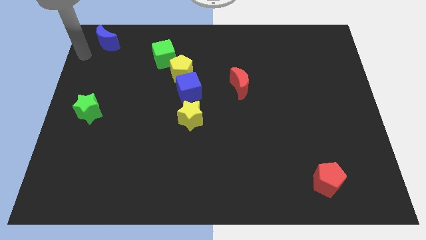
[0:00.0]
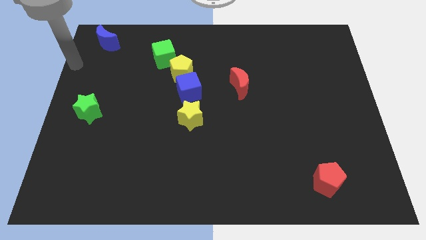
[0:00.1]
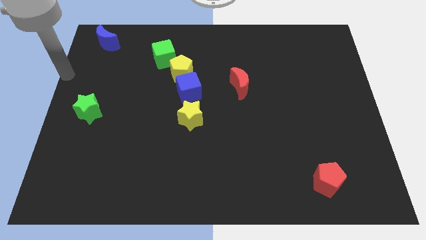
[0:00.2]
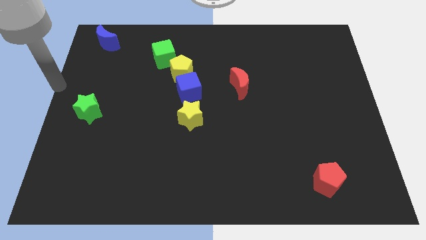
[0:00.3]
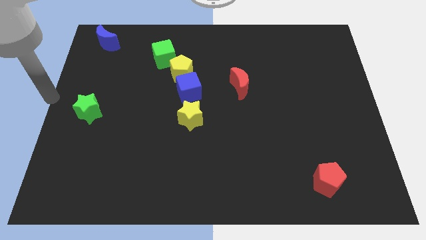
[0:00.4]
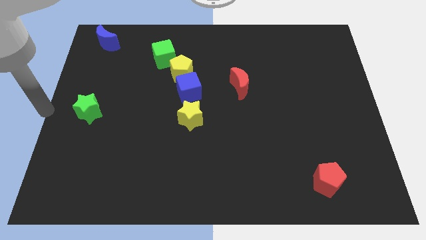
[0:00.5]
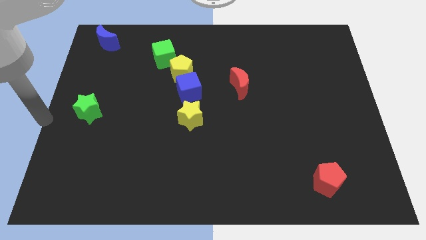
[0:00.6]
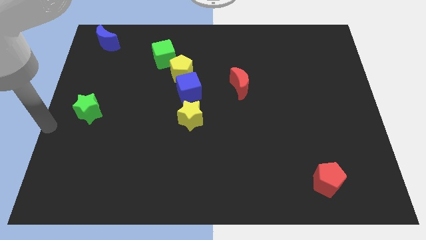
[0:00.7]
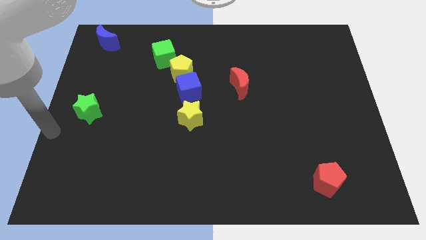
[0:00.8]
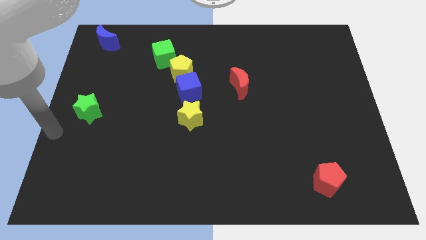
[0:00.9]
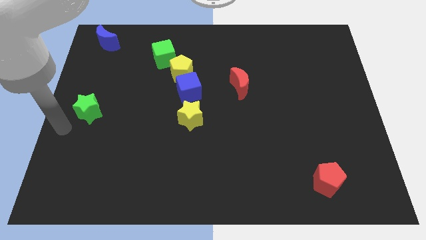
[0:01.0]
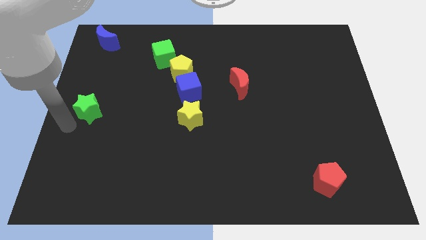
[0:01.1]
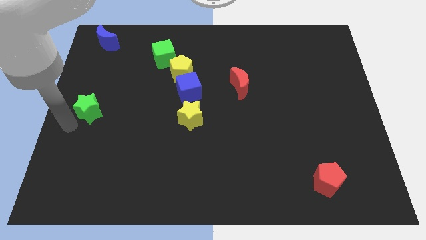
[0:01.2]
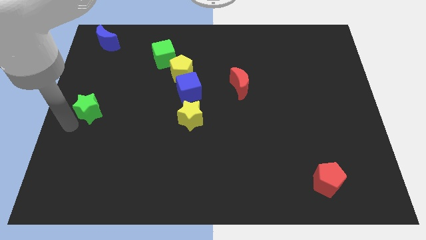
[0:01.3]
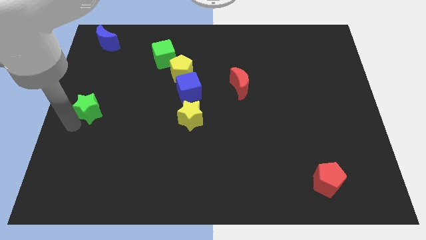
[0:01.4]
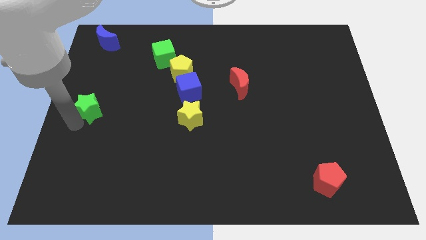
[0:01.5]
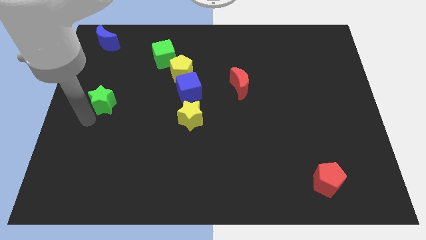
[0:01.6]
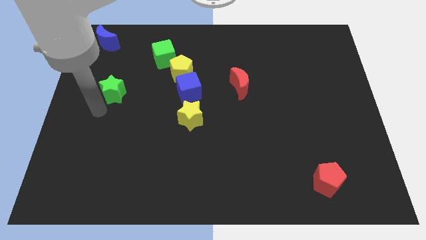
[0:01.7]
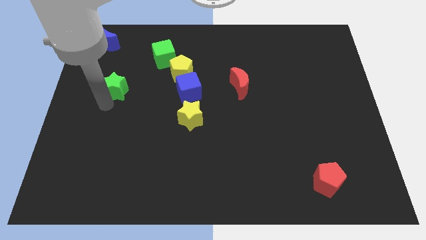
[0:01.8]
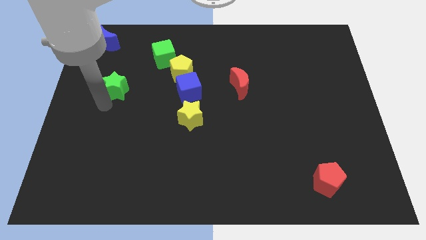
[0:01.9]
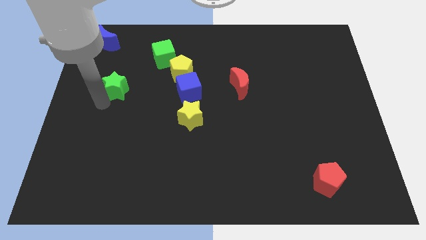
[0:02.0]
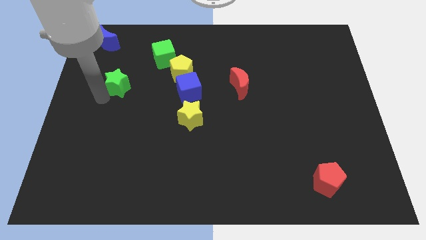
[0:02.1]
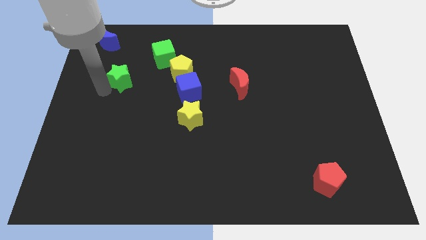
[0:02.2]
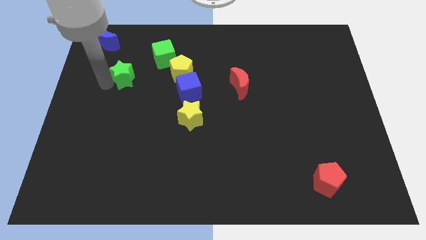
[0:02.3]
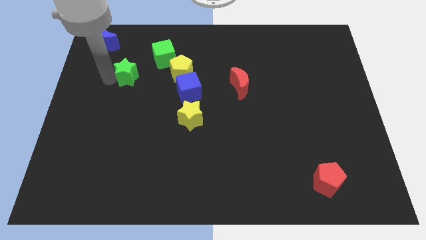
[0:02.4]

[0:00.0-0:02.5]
push the green star towards green cube

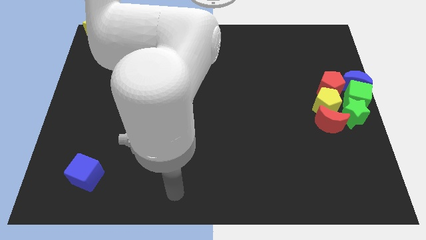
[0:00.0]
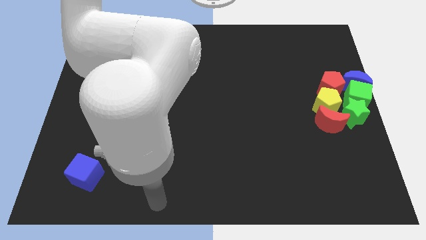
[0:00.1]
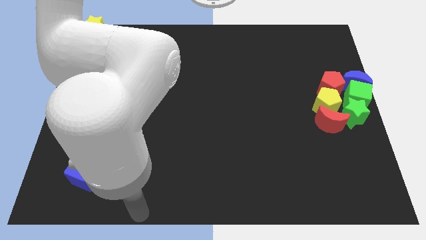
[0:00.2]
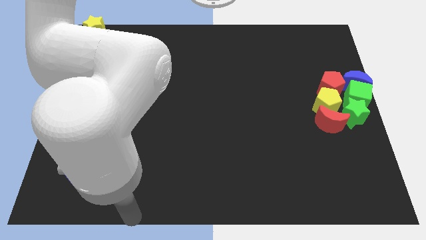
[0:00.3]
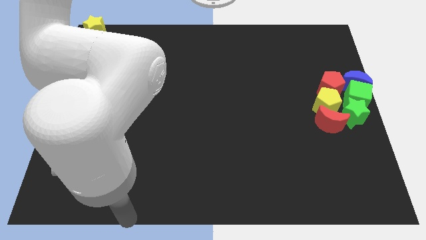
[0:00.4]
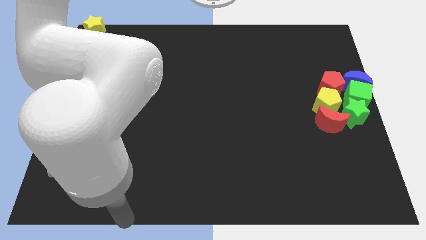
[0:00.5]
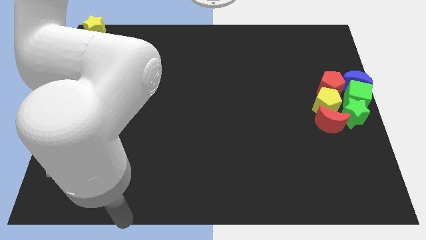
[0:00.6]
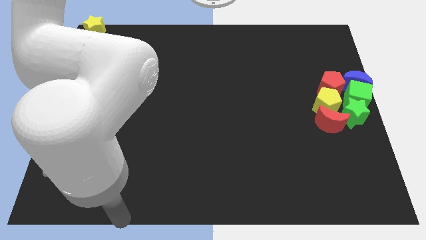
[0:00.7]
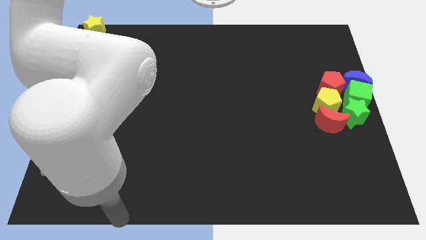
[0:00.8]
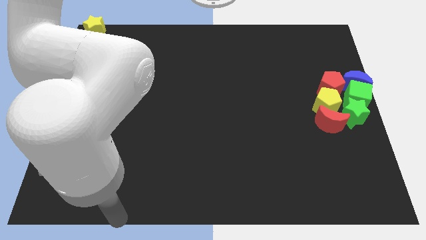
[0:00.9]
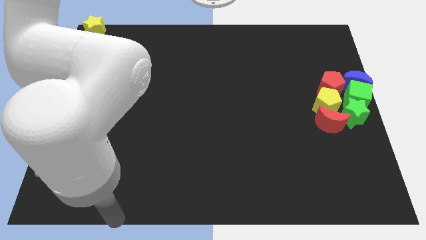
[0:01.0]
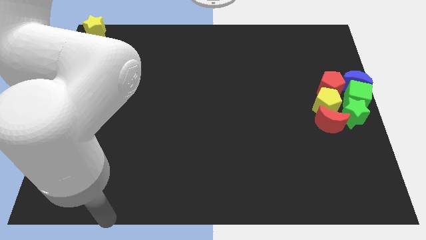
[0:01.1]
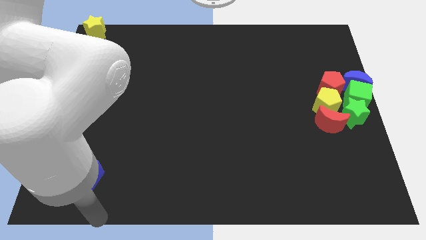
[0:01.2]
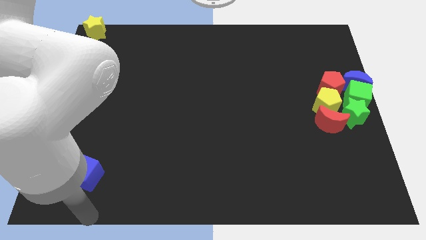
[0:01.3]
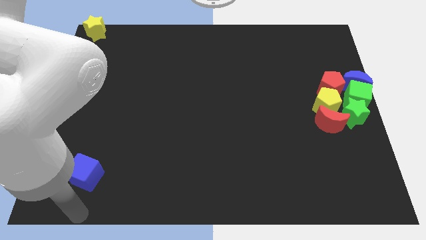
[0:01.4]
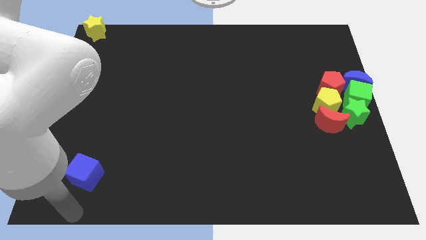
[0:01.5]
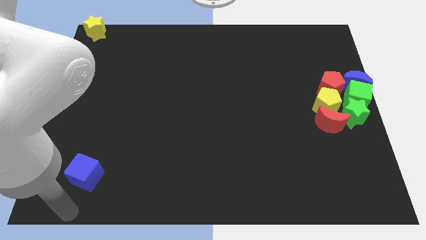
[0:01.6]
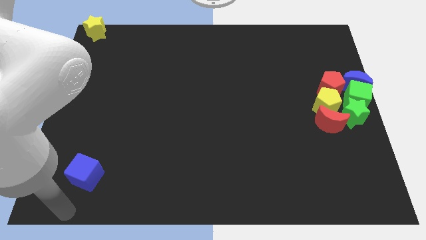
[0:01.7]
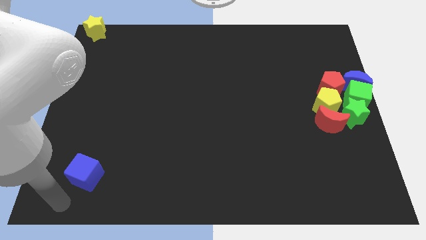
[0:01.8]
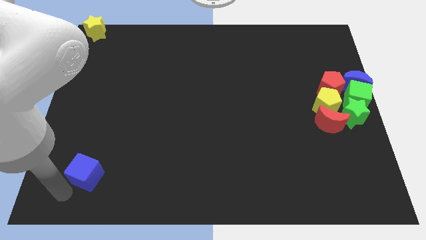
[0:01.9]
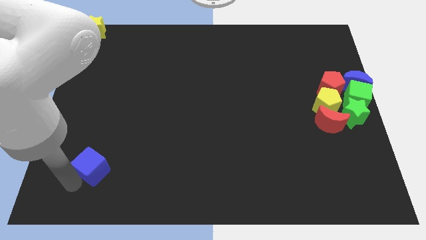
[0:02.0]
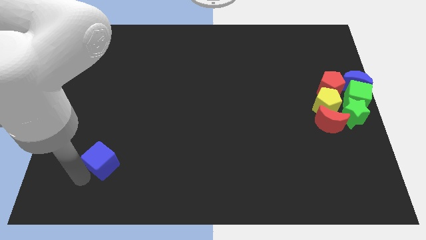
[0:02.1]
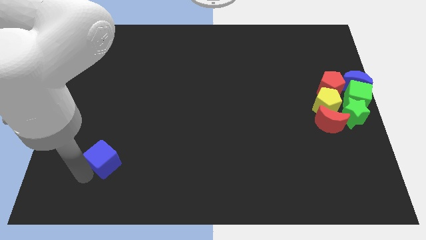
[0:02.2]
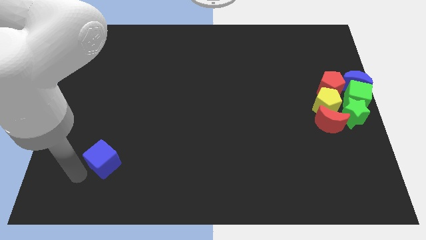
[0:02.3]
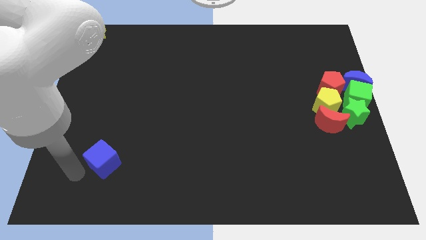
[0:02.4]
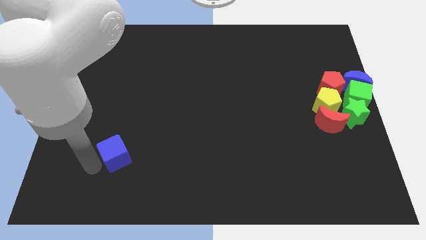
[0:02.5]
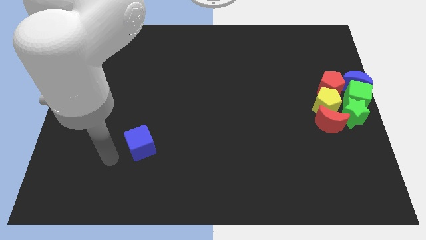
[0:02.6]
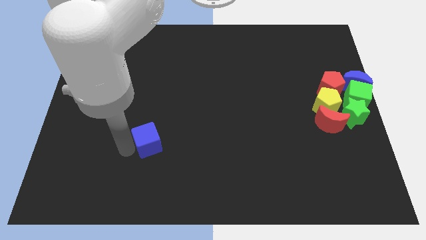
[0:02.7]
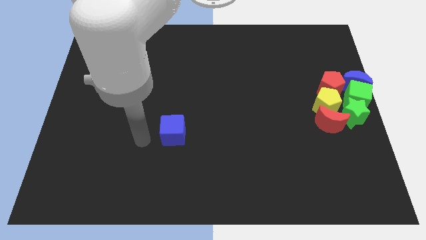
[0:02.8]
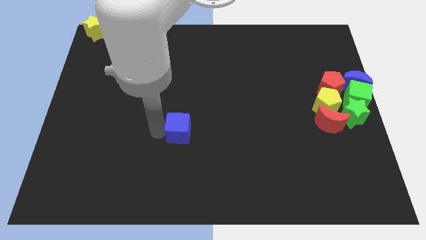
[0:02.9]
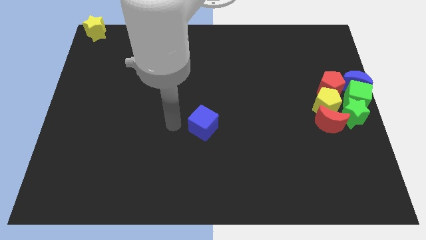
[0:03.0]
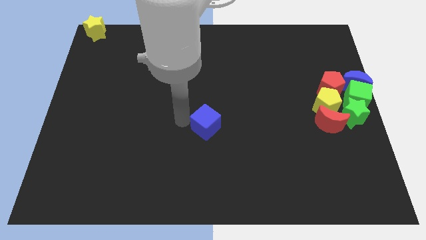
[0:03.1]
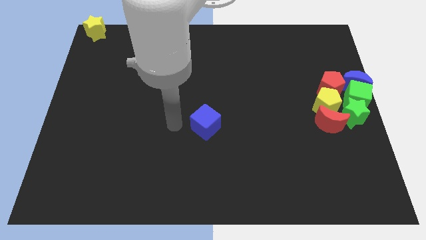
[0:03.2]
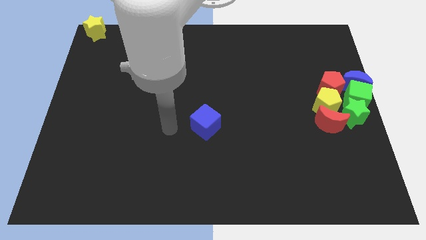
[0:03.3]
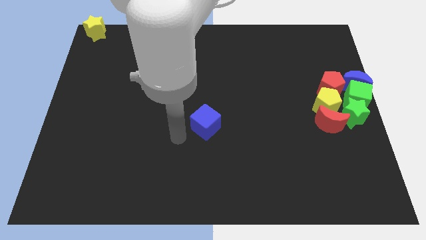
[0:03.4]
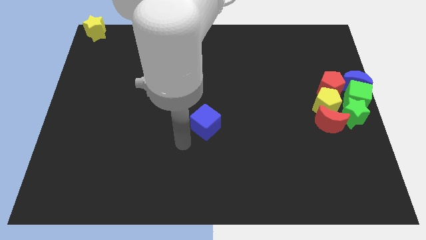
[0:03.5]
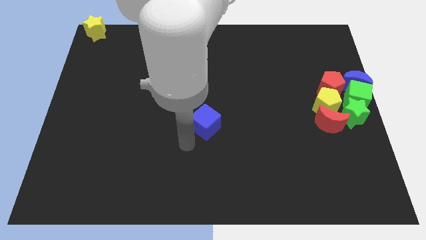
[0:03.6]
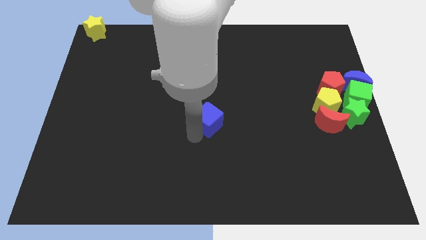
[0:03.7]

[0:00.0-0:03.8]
move the blue cube towards the centre of the board

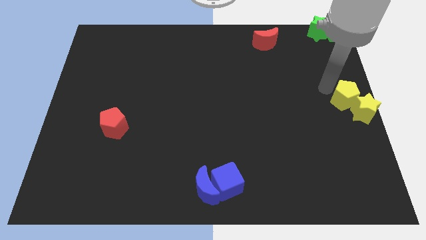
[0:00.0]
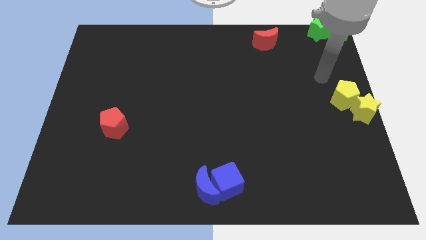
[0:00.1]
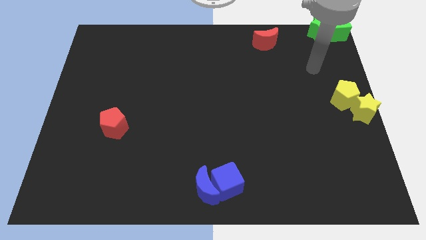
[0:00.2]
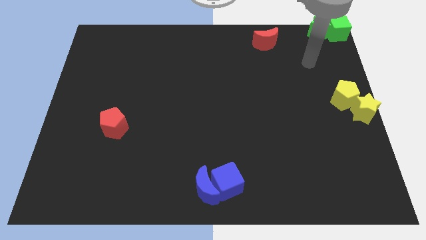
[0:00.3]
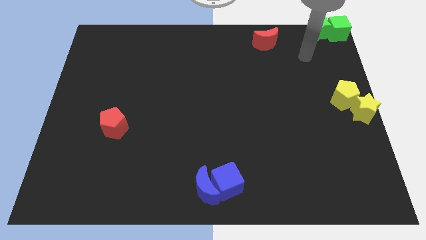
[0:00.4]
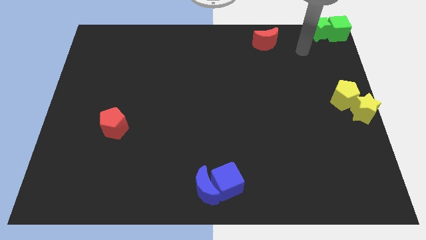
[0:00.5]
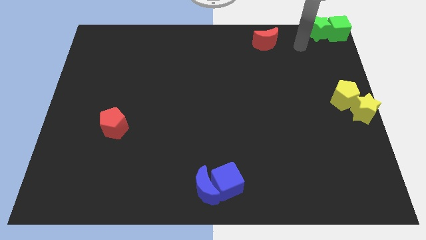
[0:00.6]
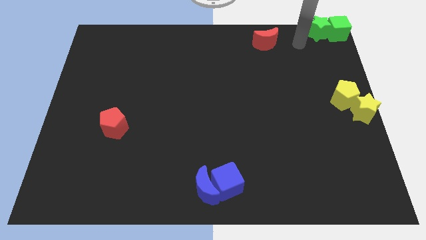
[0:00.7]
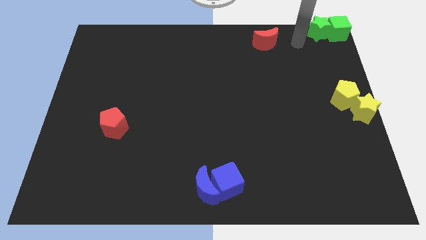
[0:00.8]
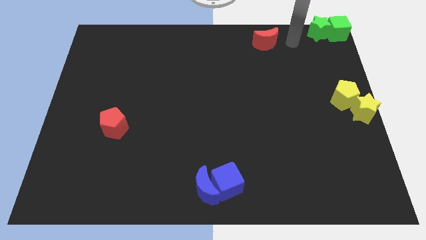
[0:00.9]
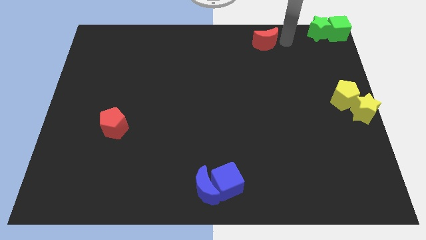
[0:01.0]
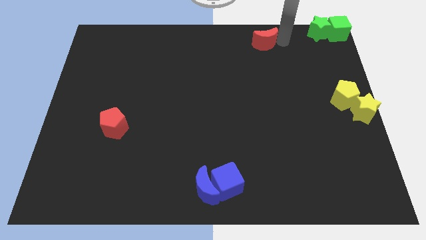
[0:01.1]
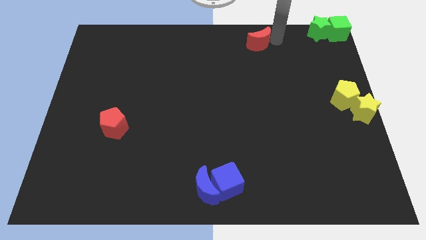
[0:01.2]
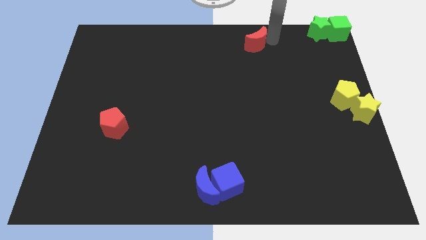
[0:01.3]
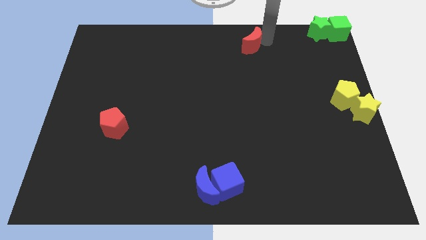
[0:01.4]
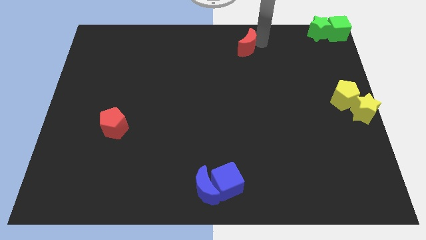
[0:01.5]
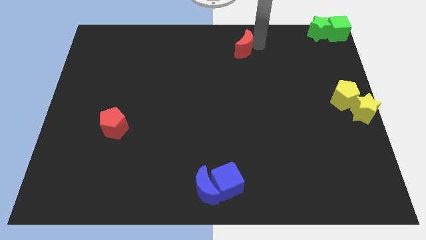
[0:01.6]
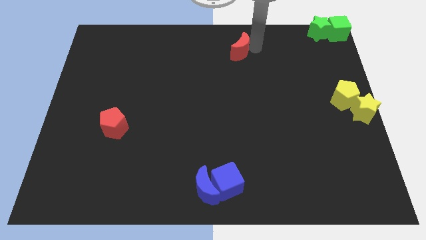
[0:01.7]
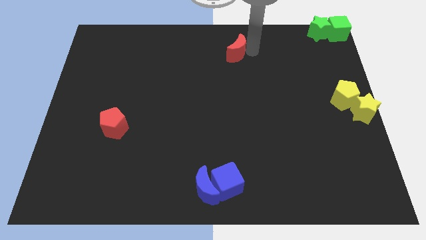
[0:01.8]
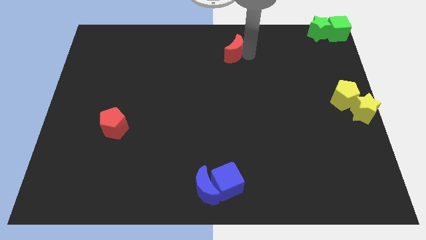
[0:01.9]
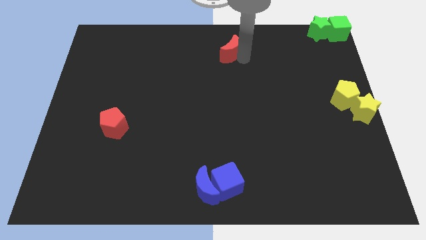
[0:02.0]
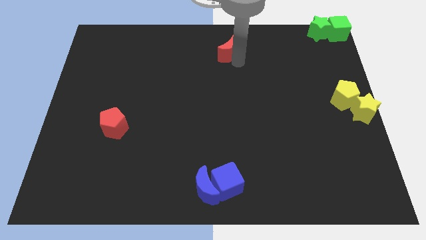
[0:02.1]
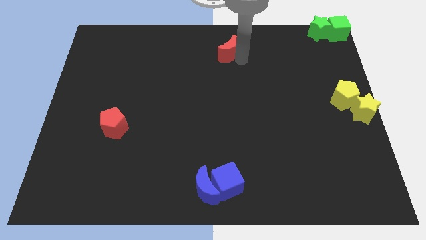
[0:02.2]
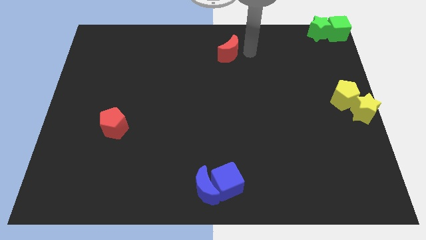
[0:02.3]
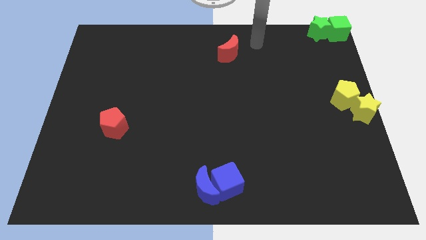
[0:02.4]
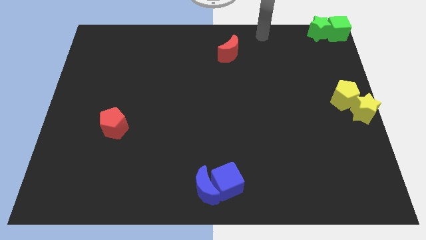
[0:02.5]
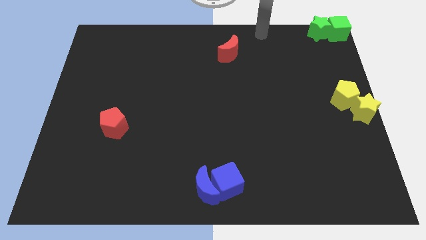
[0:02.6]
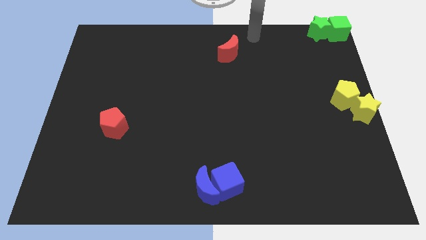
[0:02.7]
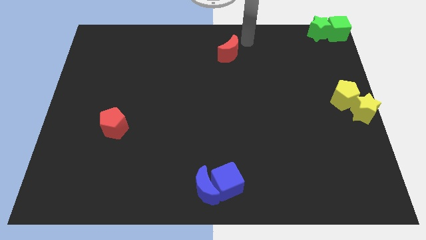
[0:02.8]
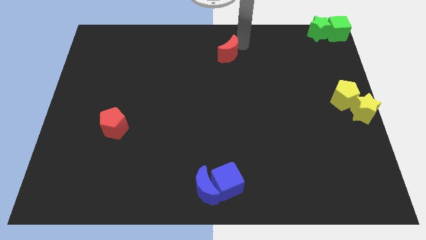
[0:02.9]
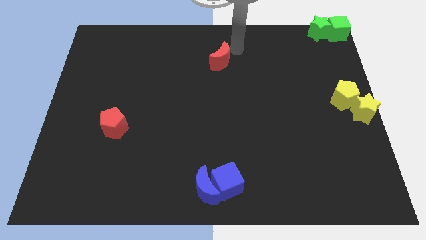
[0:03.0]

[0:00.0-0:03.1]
push the red crescent left diagonally towards down
